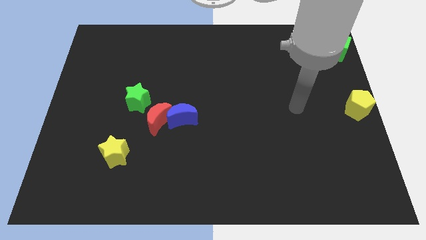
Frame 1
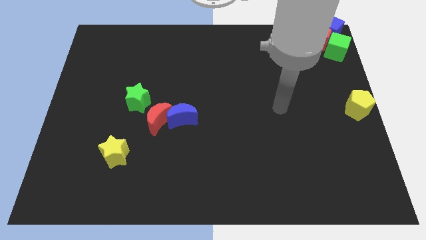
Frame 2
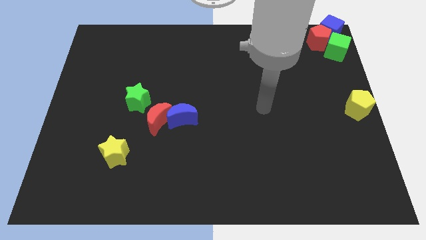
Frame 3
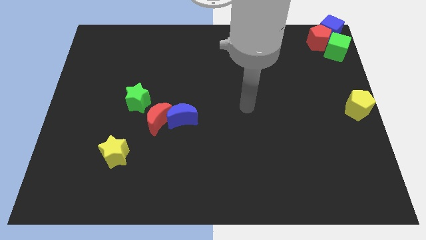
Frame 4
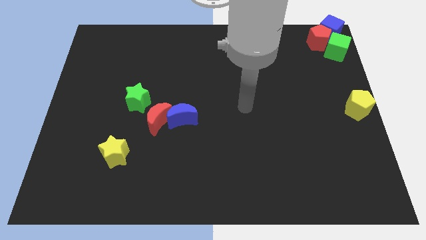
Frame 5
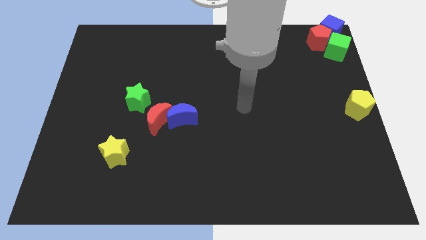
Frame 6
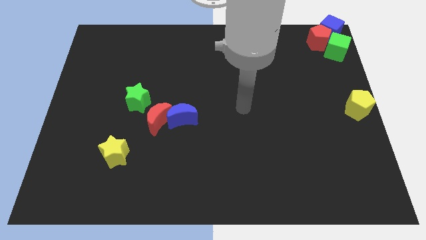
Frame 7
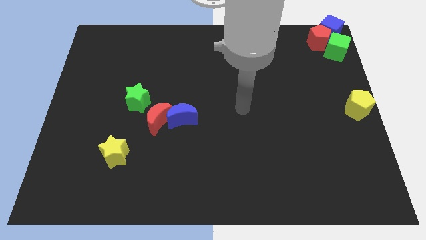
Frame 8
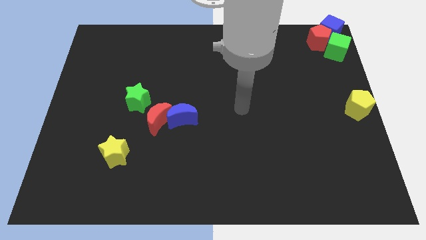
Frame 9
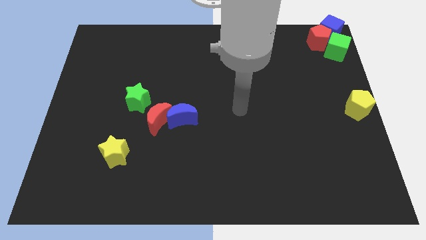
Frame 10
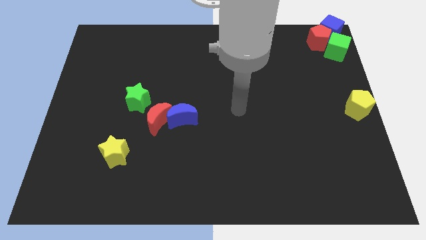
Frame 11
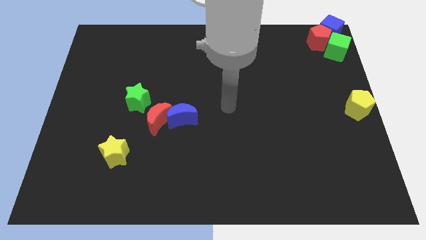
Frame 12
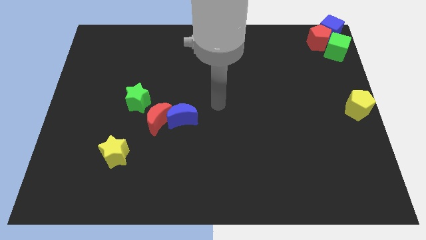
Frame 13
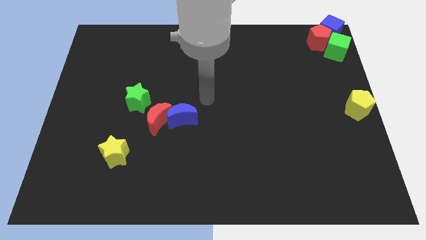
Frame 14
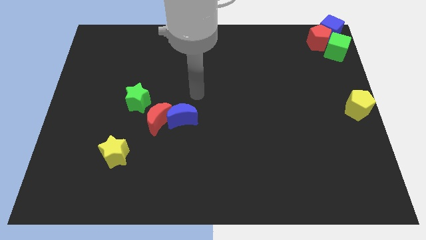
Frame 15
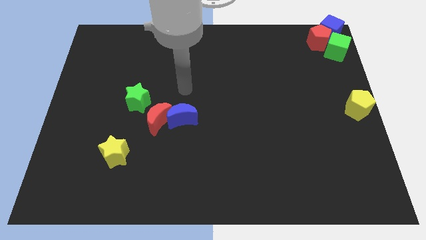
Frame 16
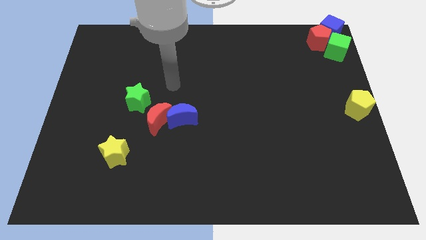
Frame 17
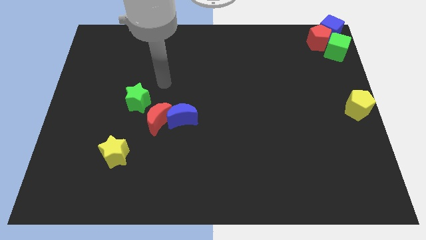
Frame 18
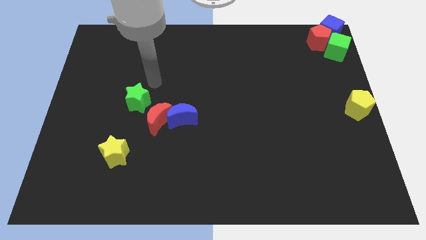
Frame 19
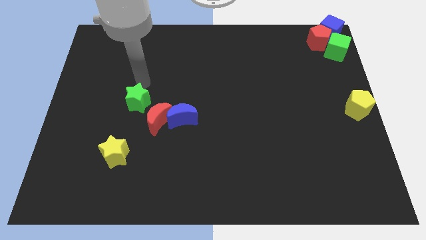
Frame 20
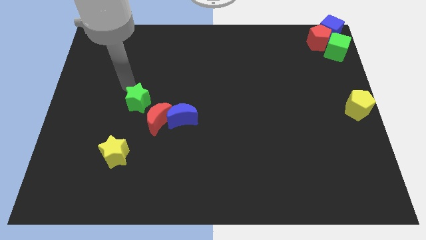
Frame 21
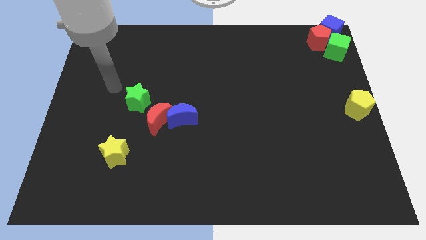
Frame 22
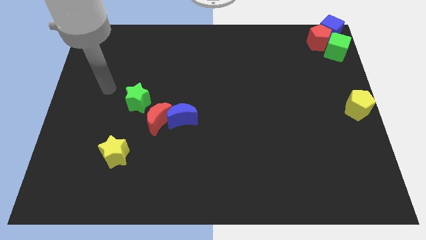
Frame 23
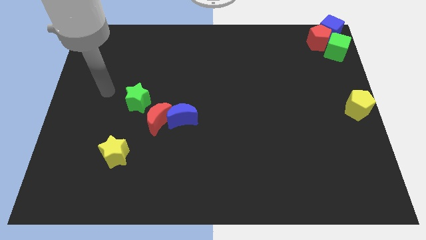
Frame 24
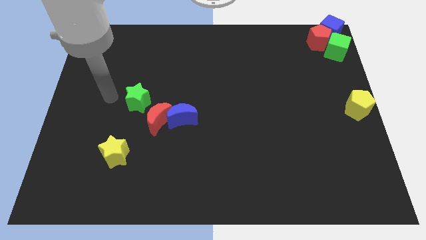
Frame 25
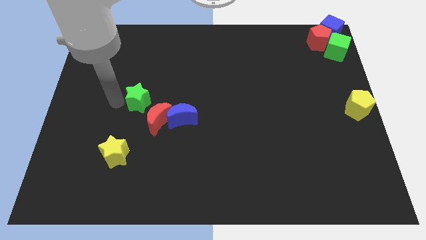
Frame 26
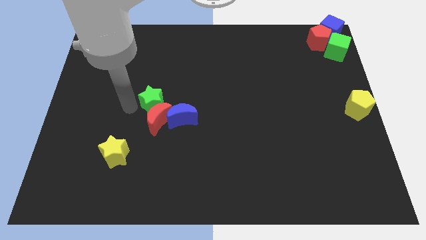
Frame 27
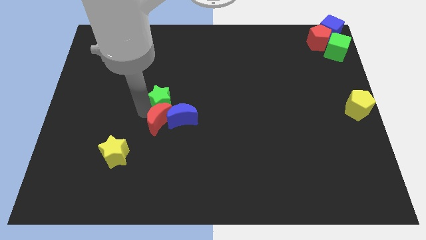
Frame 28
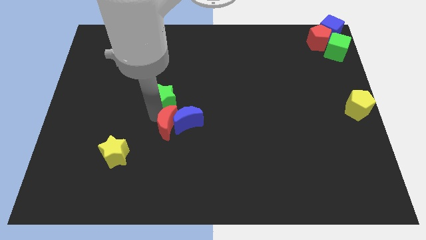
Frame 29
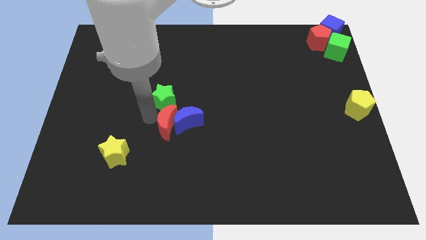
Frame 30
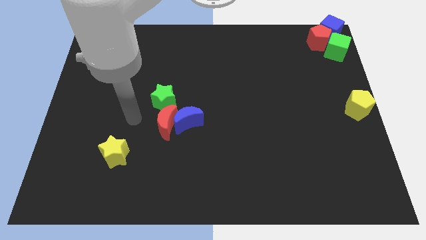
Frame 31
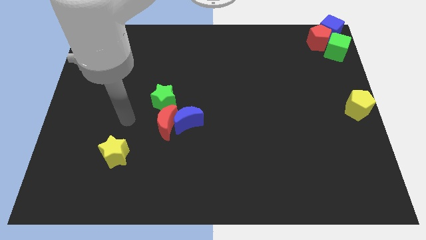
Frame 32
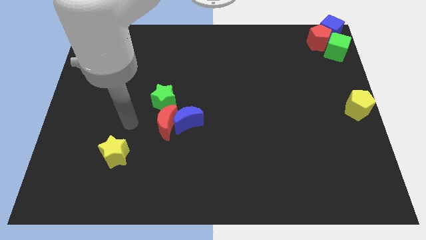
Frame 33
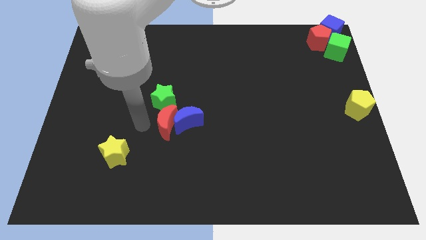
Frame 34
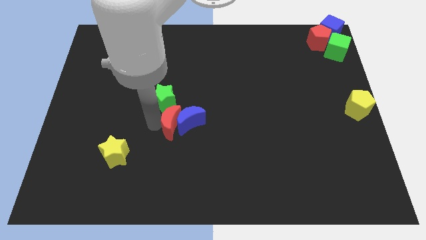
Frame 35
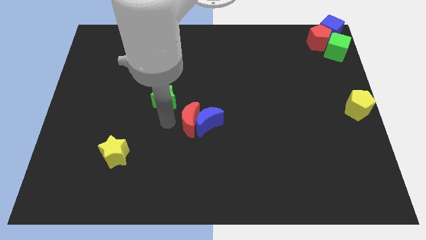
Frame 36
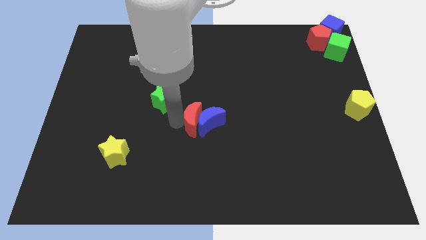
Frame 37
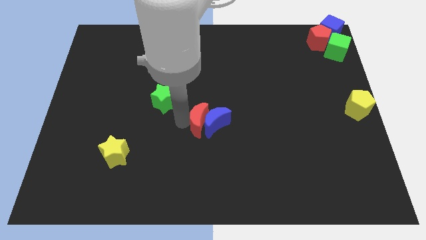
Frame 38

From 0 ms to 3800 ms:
move the blue moonred moon slightly center of the board

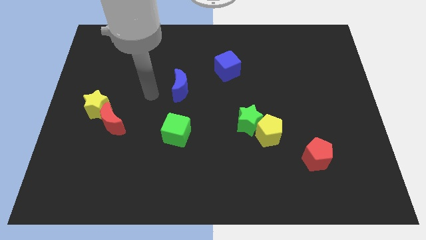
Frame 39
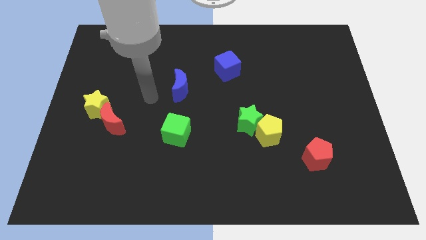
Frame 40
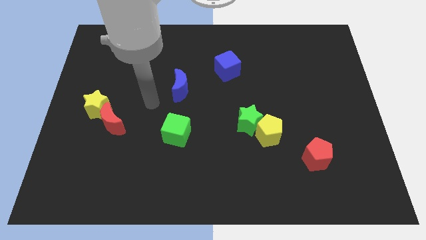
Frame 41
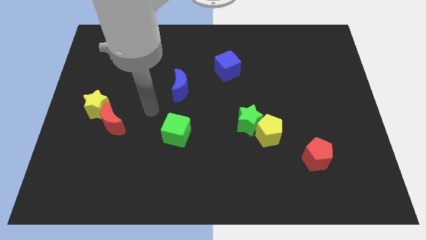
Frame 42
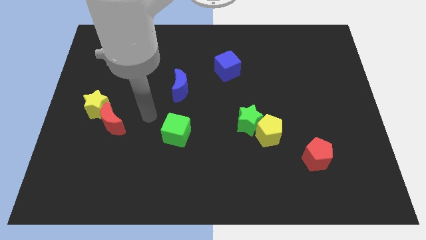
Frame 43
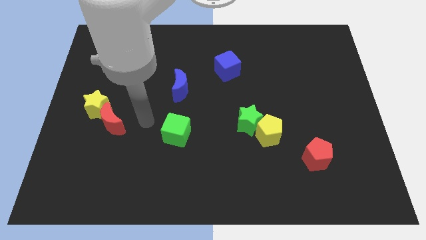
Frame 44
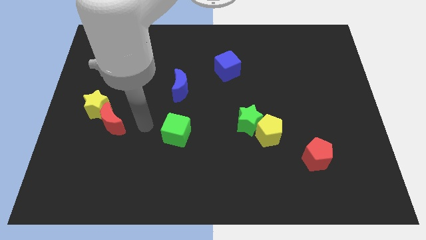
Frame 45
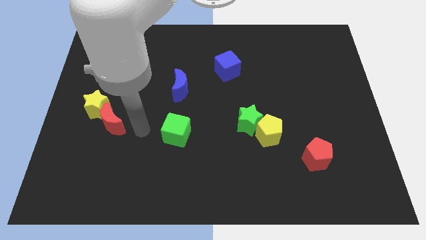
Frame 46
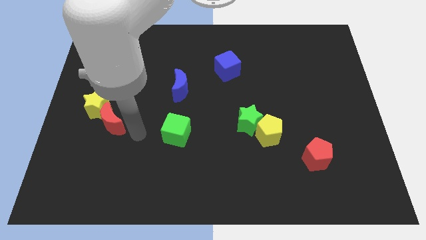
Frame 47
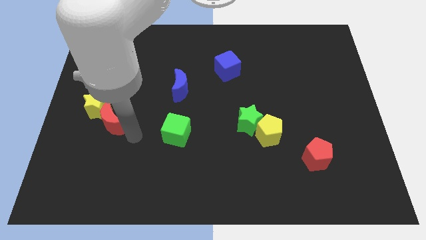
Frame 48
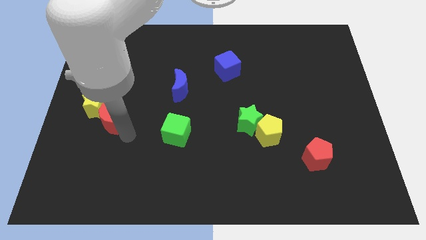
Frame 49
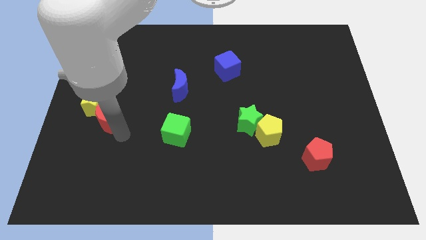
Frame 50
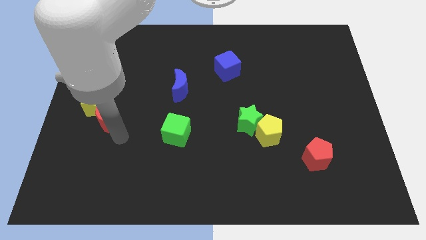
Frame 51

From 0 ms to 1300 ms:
place your arm close to the red moon

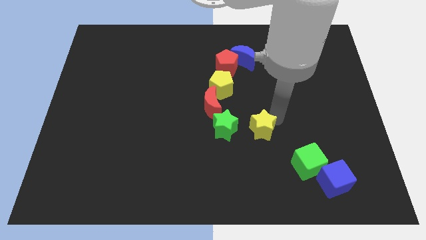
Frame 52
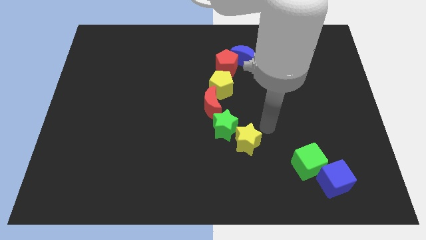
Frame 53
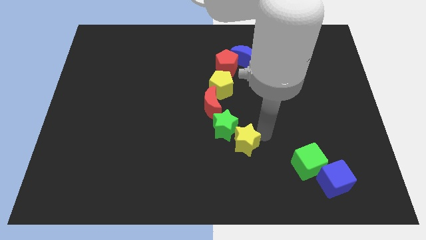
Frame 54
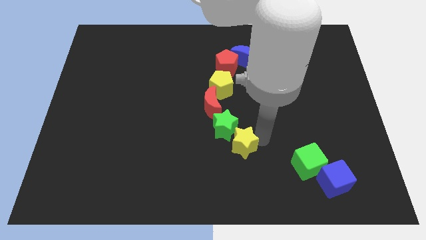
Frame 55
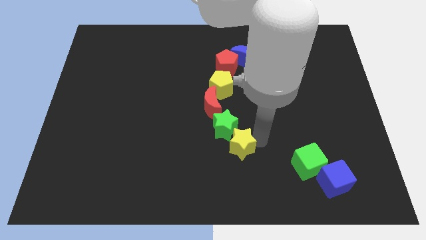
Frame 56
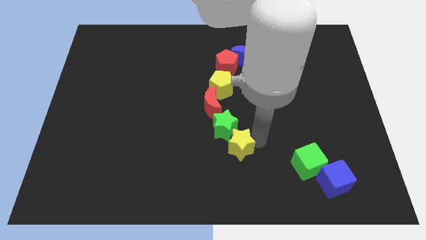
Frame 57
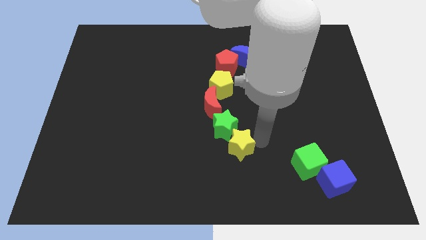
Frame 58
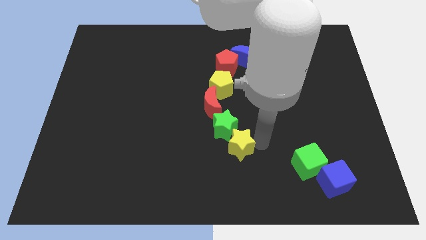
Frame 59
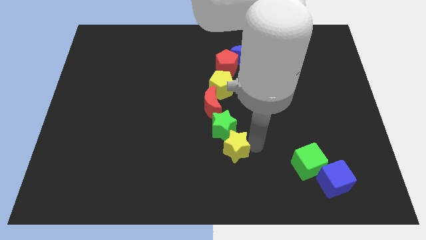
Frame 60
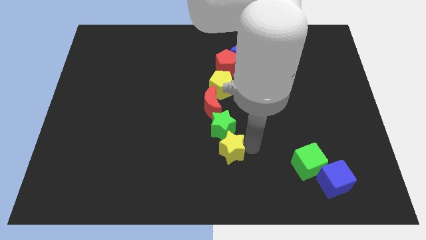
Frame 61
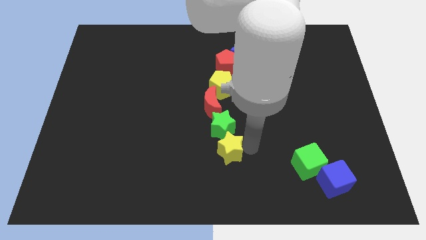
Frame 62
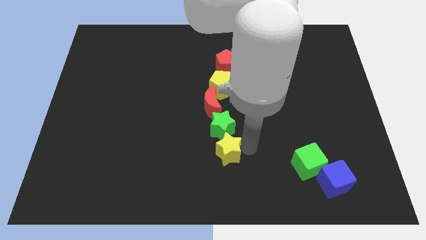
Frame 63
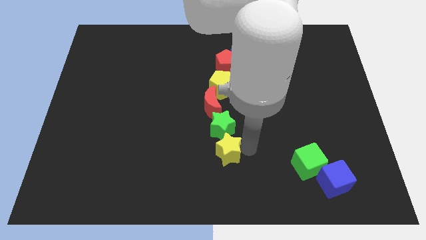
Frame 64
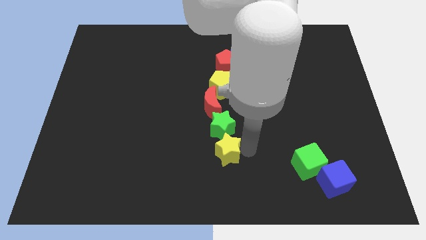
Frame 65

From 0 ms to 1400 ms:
place yellow star below green star

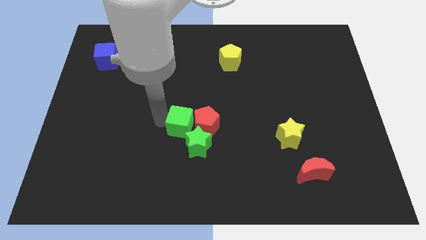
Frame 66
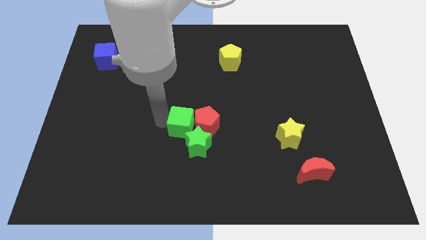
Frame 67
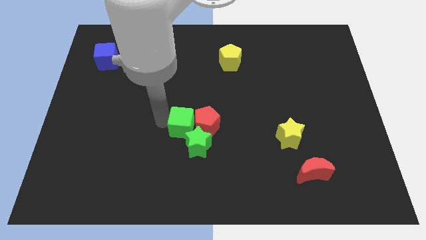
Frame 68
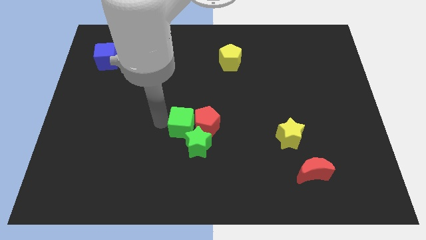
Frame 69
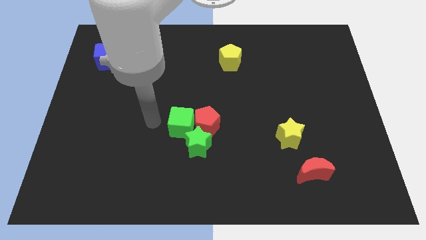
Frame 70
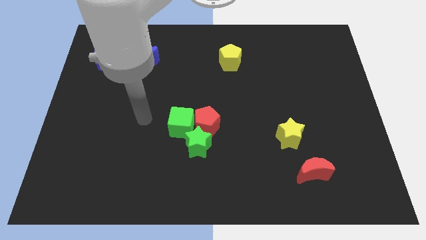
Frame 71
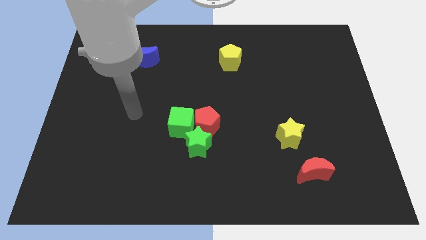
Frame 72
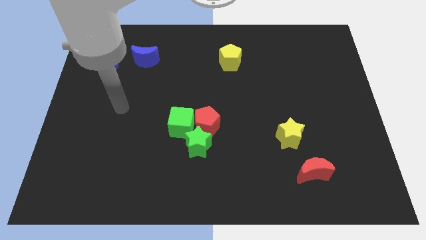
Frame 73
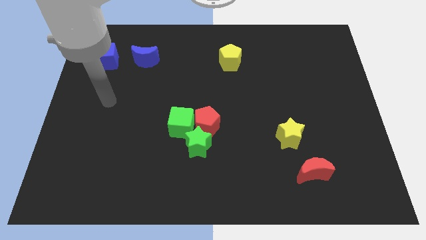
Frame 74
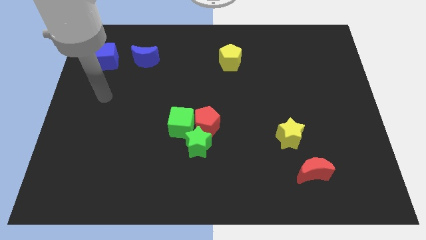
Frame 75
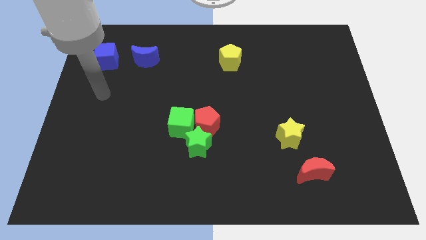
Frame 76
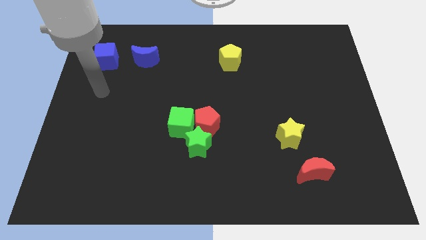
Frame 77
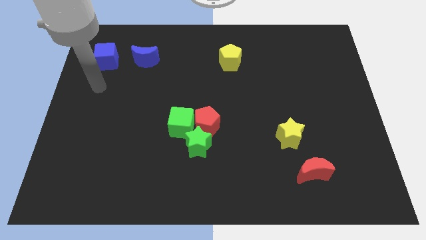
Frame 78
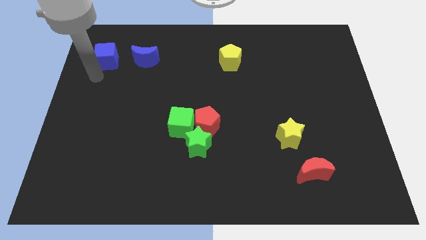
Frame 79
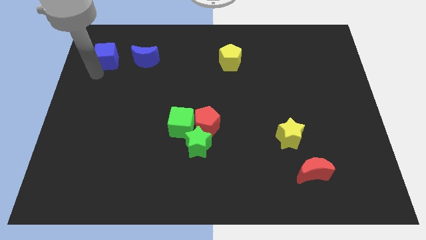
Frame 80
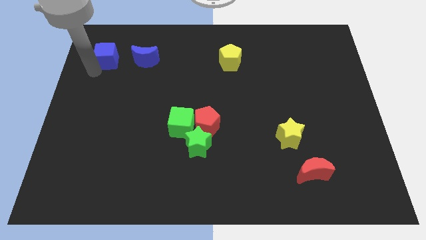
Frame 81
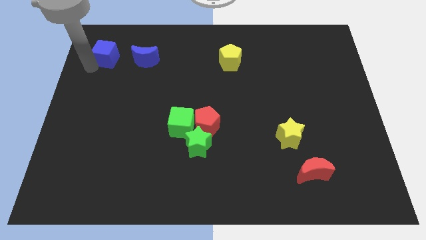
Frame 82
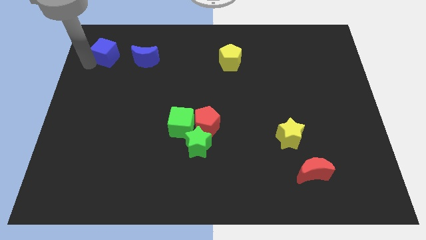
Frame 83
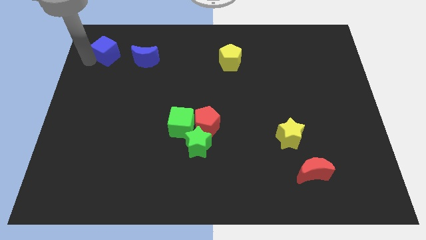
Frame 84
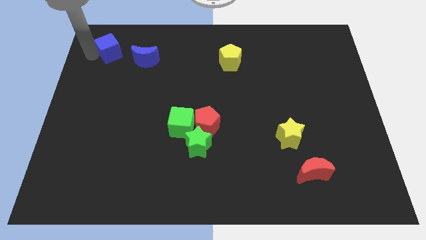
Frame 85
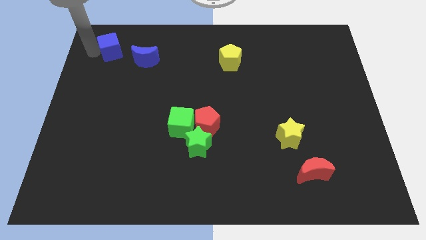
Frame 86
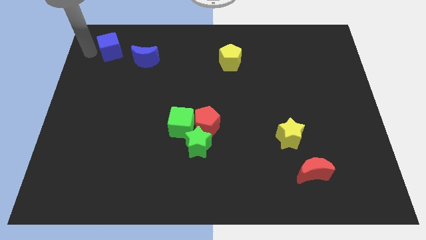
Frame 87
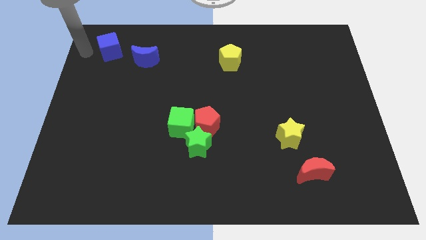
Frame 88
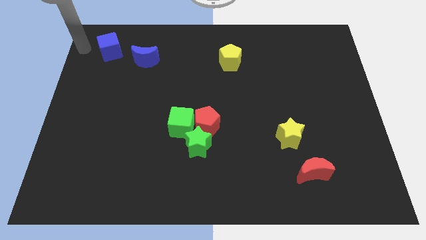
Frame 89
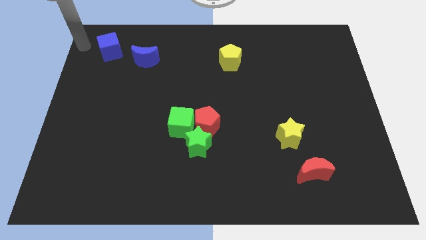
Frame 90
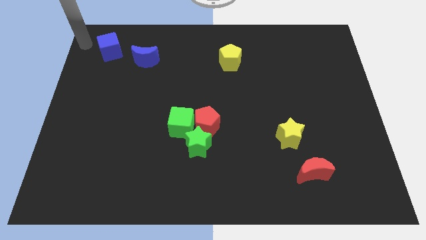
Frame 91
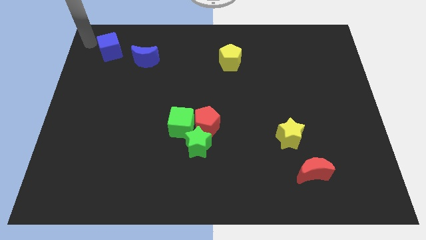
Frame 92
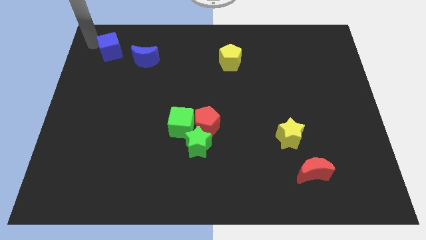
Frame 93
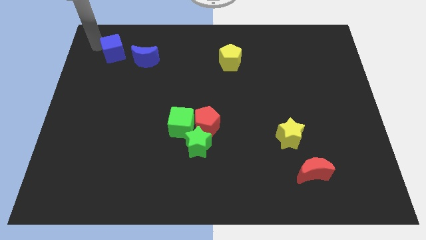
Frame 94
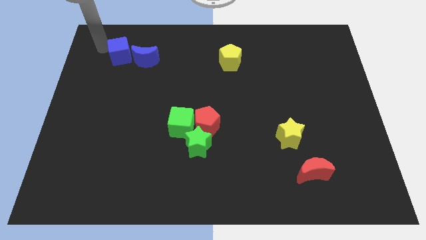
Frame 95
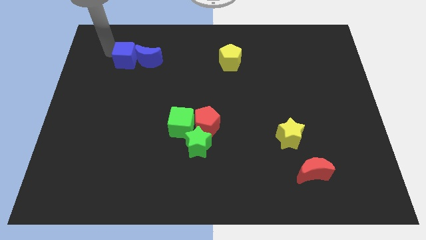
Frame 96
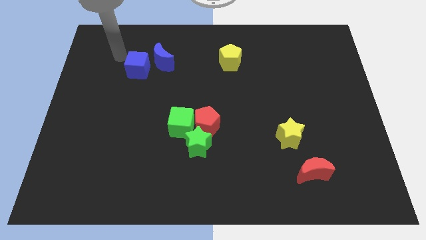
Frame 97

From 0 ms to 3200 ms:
slide the blue cube into the left side of the blue crescent
